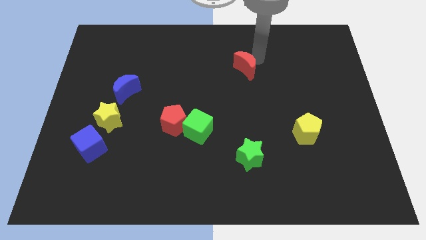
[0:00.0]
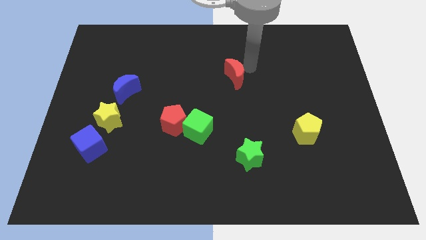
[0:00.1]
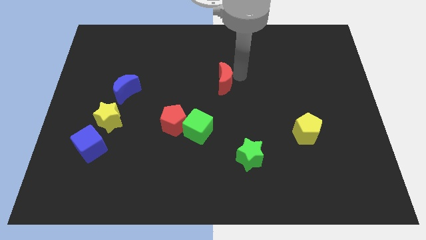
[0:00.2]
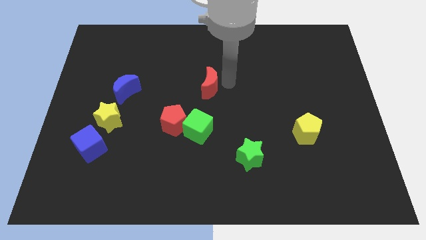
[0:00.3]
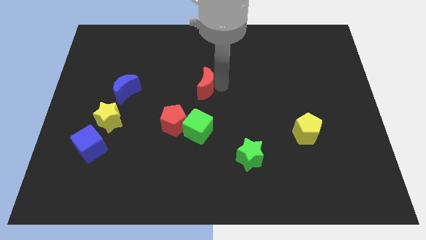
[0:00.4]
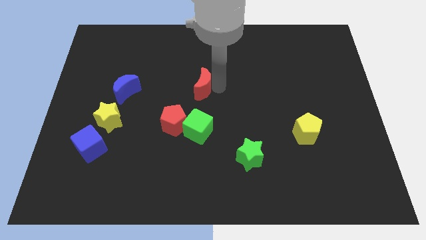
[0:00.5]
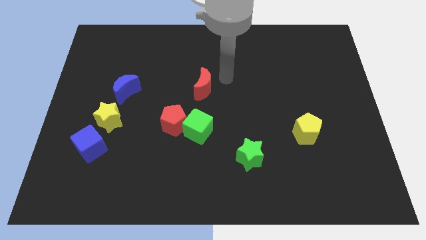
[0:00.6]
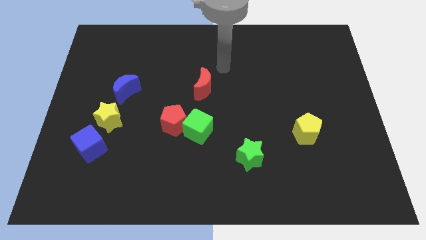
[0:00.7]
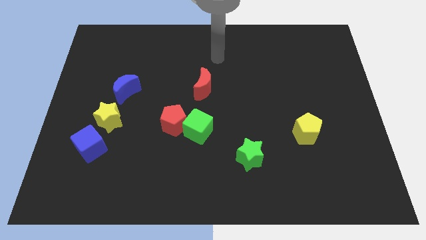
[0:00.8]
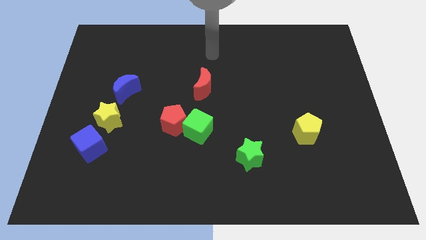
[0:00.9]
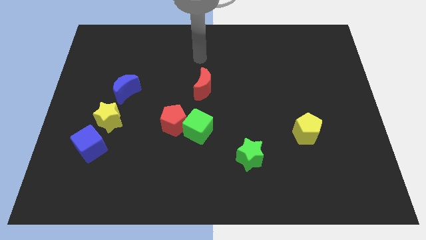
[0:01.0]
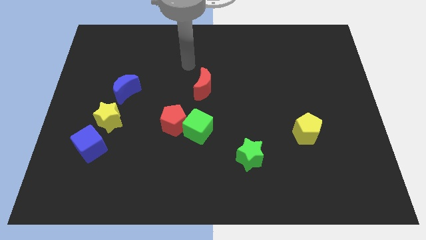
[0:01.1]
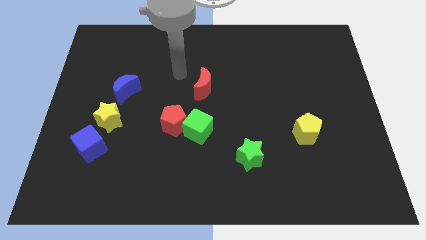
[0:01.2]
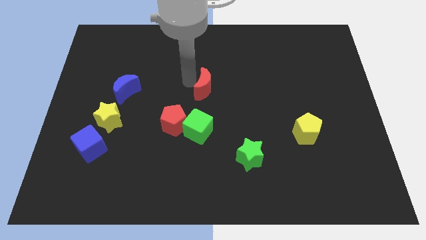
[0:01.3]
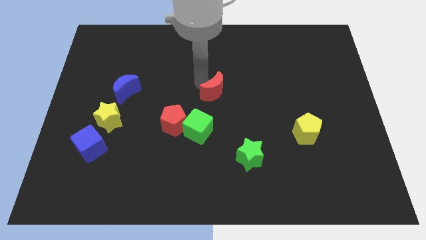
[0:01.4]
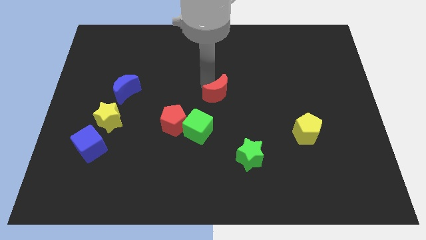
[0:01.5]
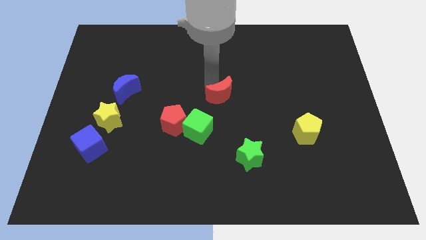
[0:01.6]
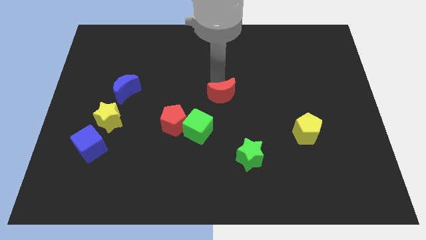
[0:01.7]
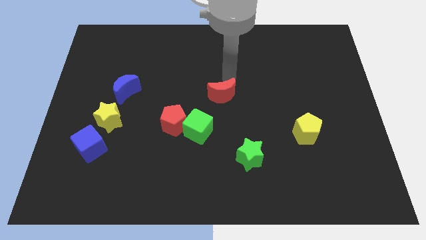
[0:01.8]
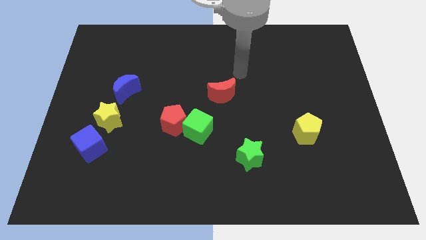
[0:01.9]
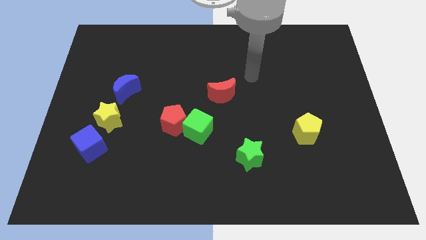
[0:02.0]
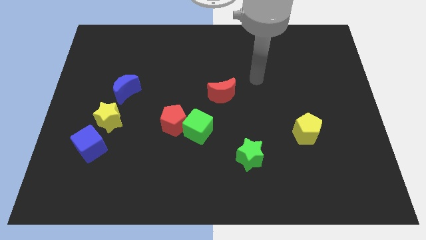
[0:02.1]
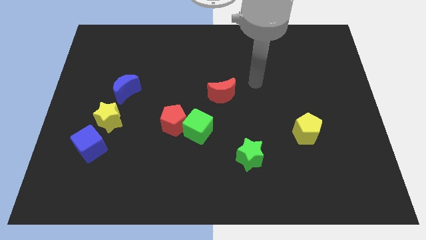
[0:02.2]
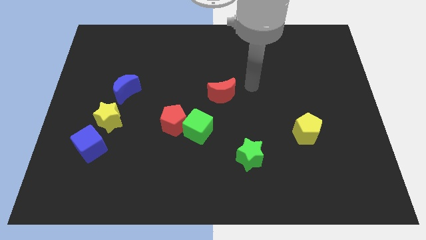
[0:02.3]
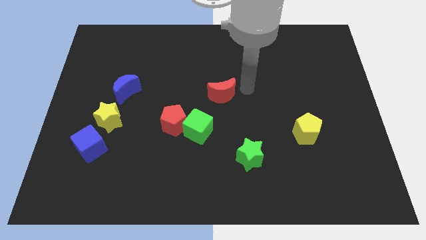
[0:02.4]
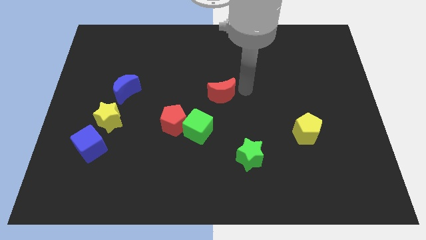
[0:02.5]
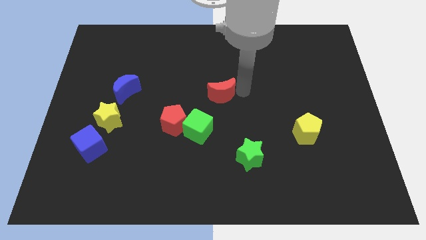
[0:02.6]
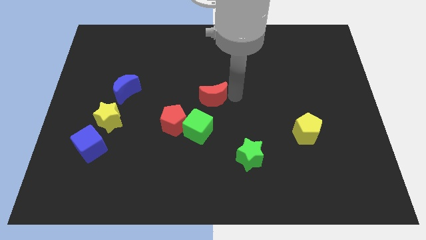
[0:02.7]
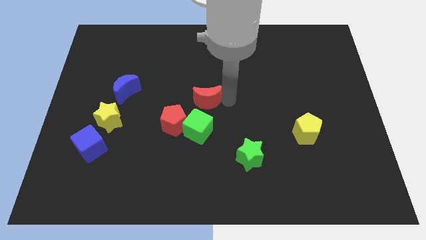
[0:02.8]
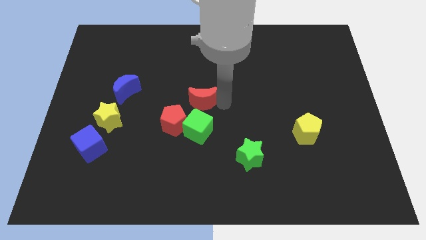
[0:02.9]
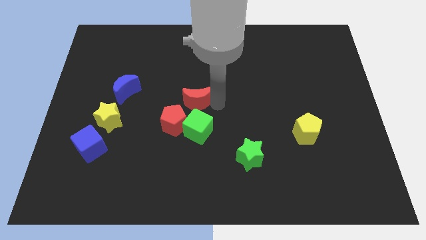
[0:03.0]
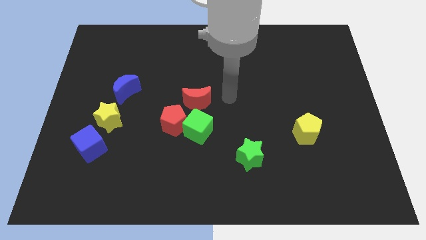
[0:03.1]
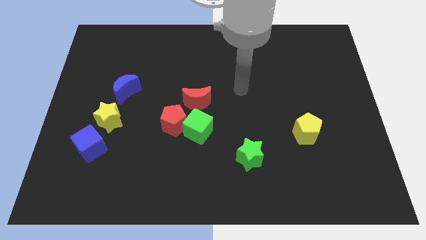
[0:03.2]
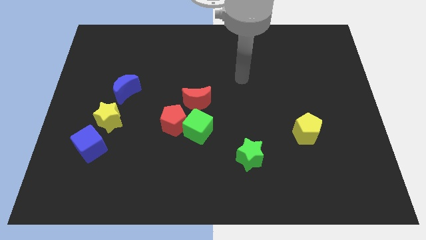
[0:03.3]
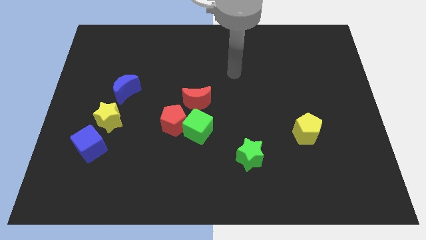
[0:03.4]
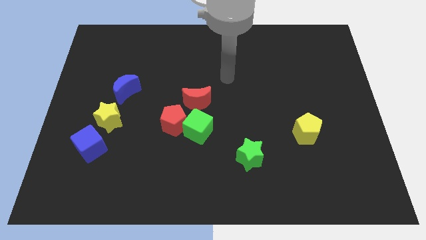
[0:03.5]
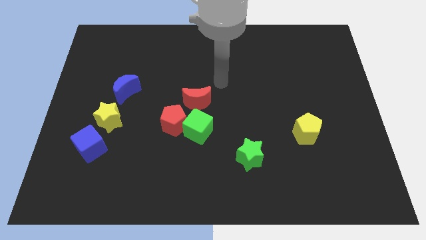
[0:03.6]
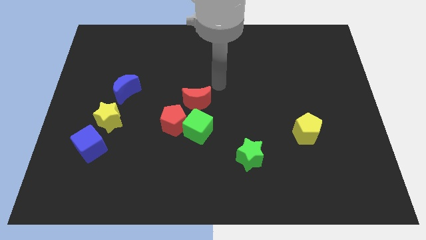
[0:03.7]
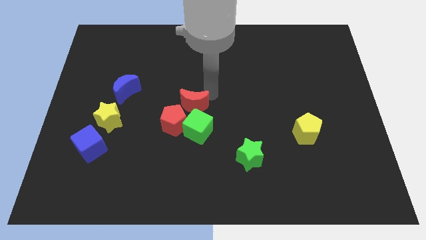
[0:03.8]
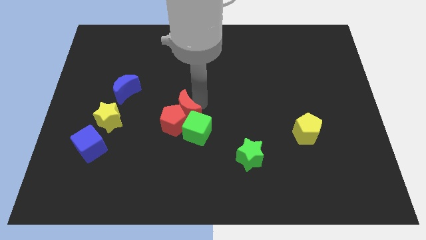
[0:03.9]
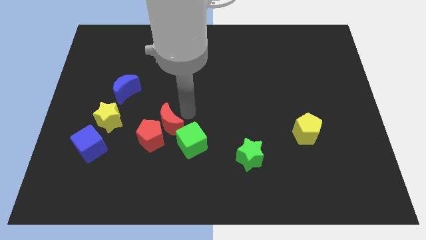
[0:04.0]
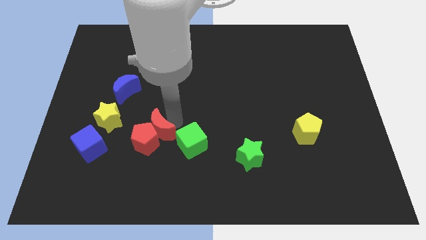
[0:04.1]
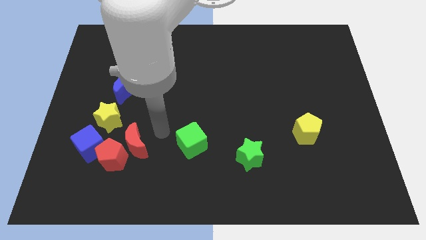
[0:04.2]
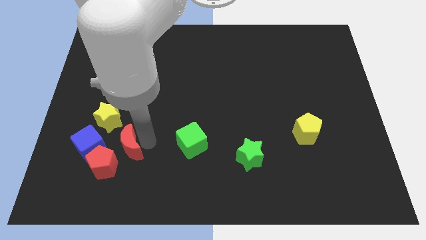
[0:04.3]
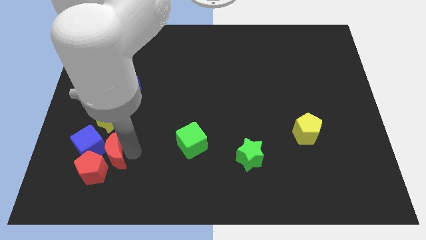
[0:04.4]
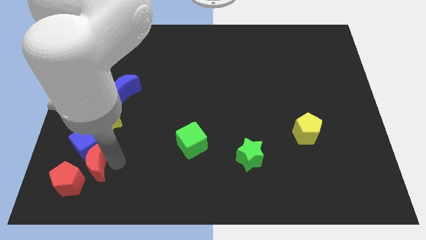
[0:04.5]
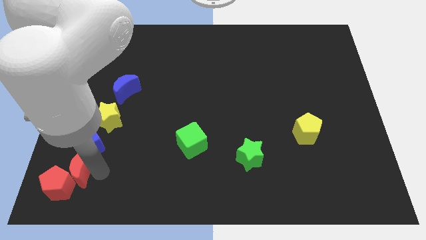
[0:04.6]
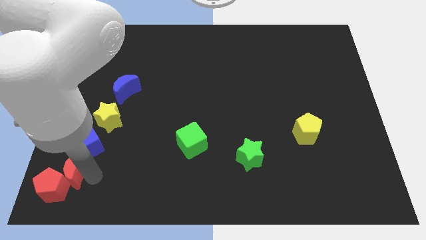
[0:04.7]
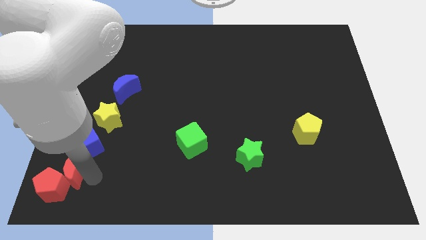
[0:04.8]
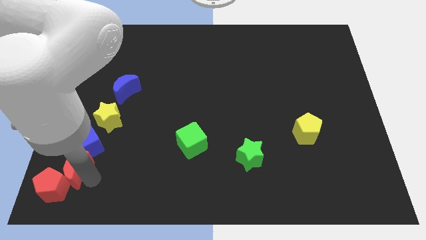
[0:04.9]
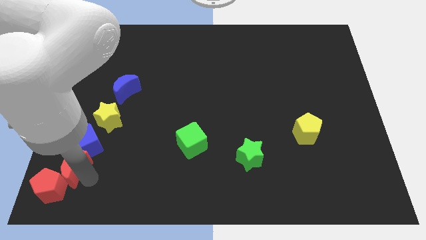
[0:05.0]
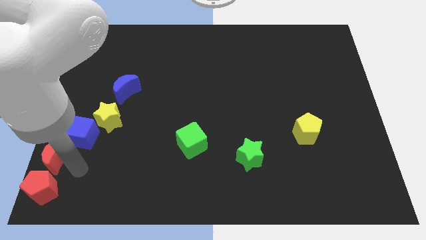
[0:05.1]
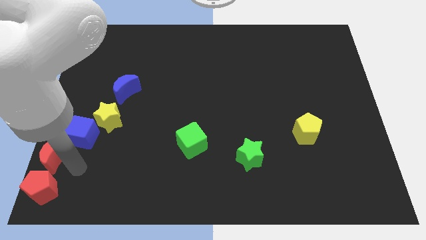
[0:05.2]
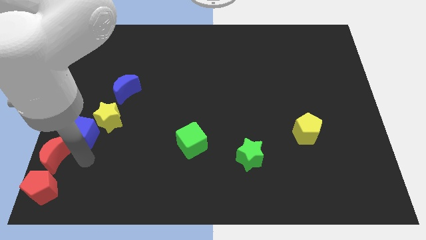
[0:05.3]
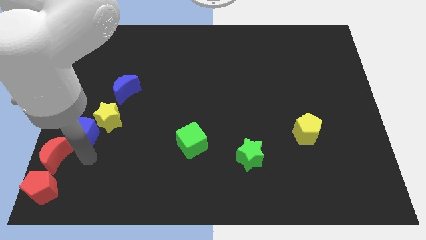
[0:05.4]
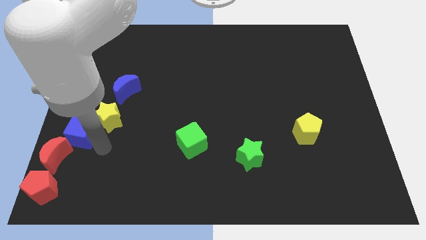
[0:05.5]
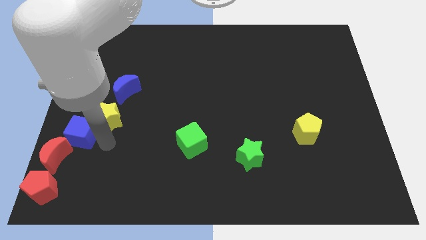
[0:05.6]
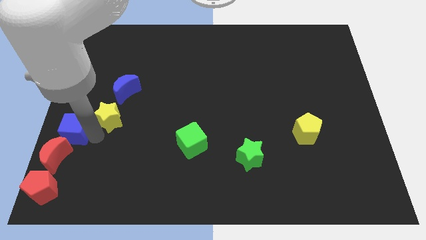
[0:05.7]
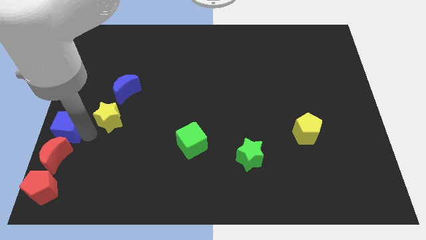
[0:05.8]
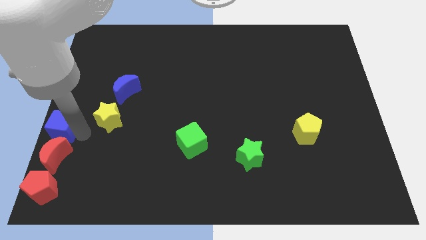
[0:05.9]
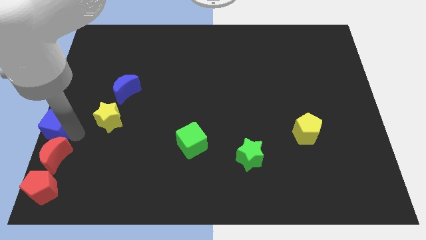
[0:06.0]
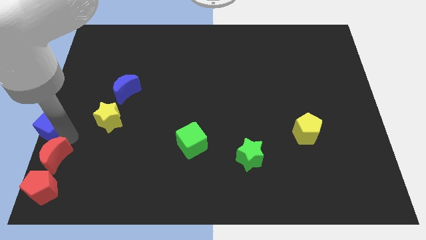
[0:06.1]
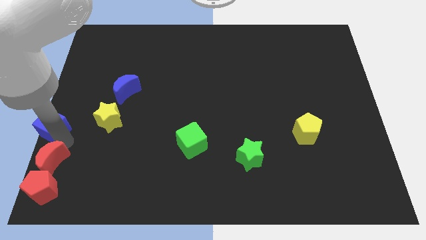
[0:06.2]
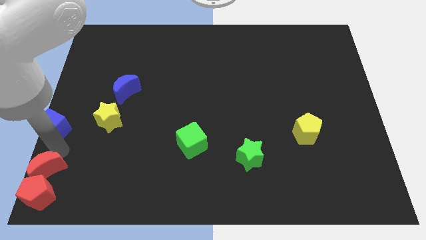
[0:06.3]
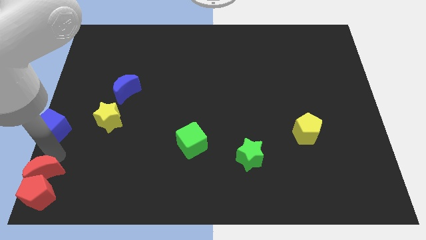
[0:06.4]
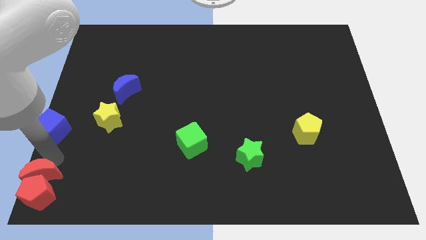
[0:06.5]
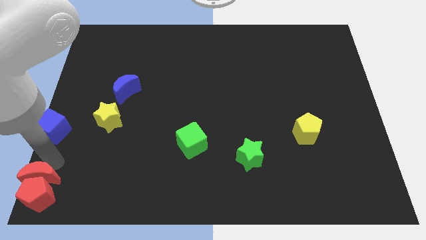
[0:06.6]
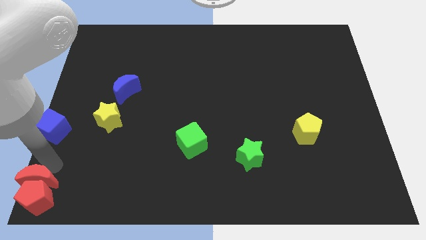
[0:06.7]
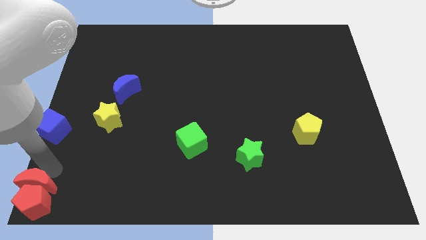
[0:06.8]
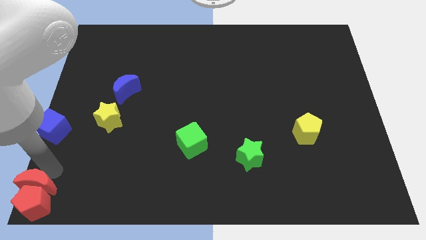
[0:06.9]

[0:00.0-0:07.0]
push the red pentagon along with the red crescent to the bottom left of the board

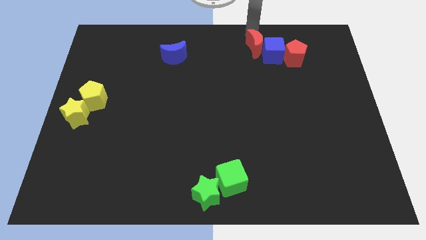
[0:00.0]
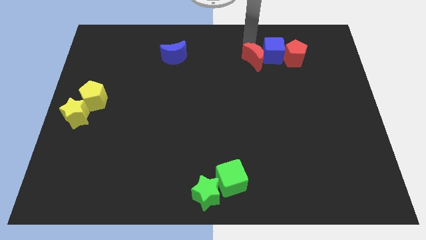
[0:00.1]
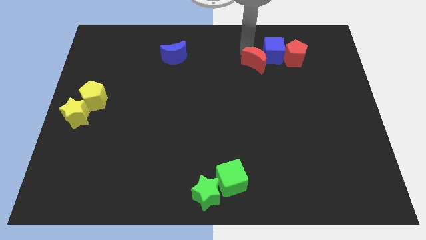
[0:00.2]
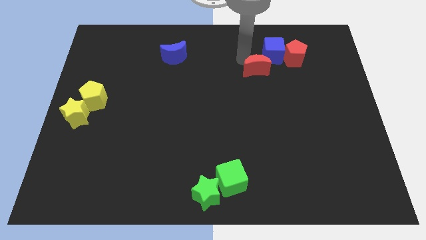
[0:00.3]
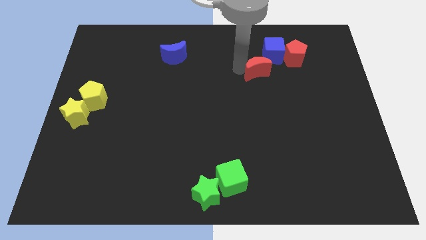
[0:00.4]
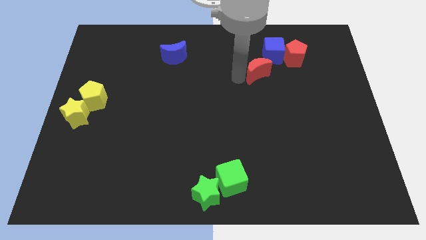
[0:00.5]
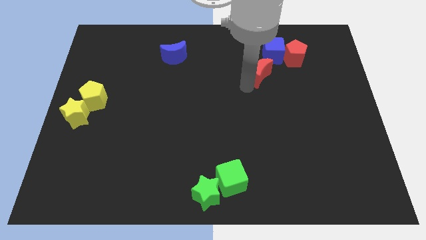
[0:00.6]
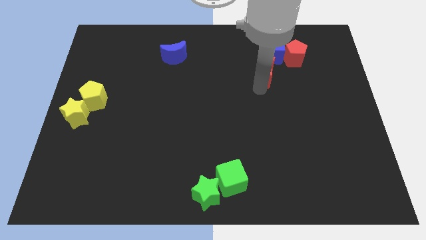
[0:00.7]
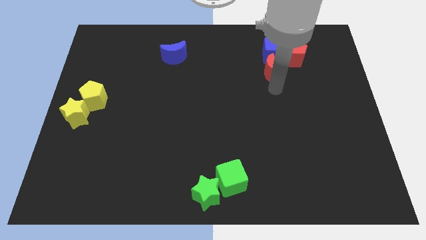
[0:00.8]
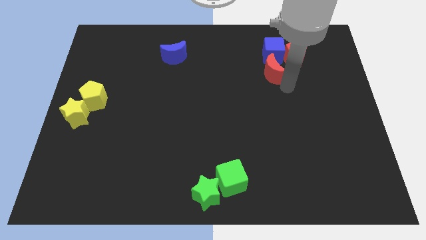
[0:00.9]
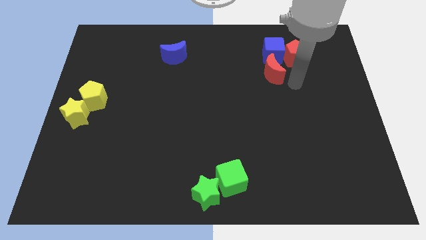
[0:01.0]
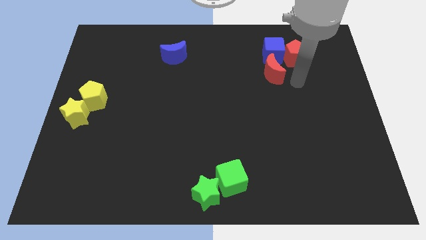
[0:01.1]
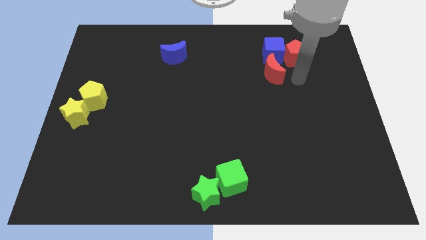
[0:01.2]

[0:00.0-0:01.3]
move the red moon to the bottom side of the blue cube

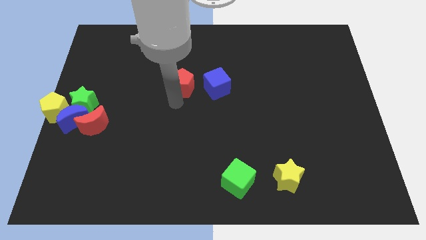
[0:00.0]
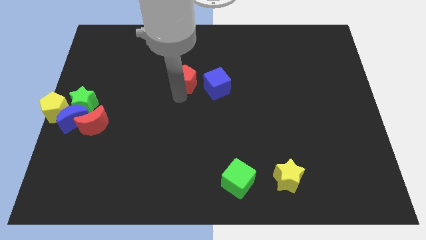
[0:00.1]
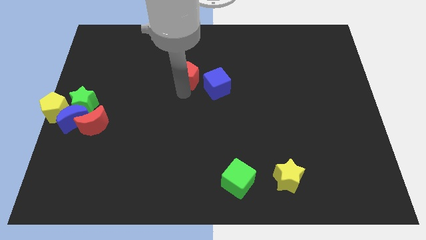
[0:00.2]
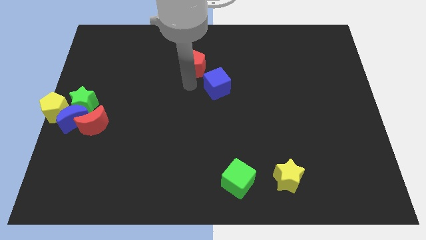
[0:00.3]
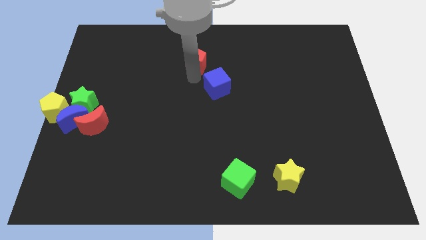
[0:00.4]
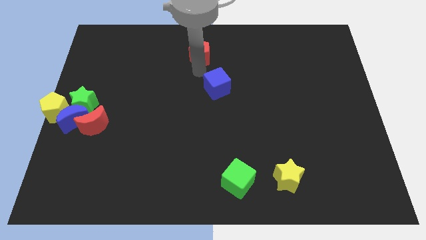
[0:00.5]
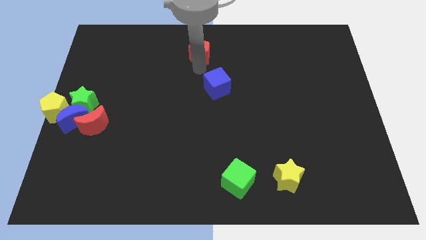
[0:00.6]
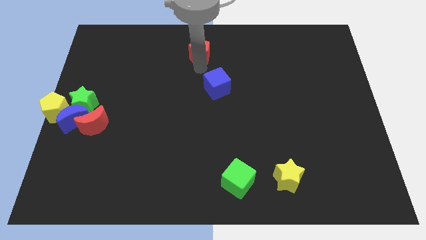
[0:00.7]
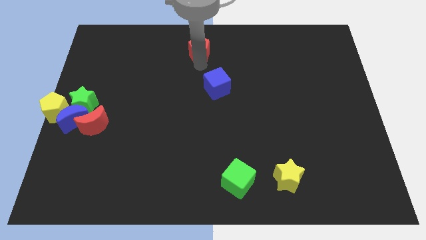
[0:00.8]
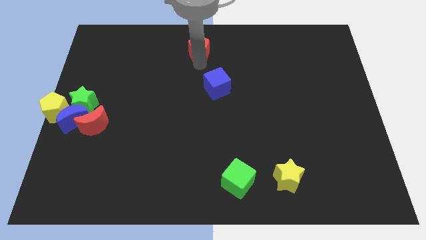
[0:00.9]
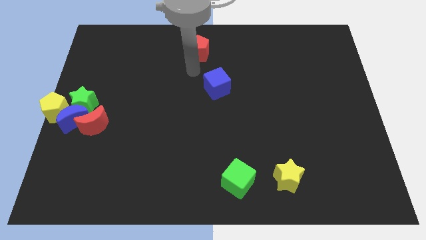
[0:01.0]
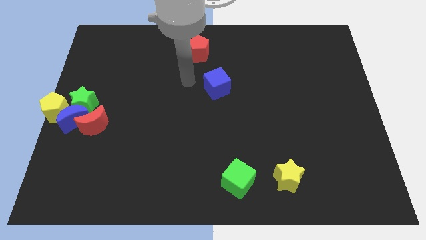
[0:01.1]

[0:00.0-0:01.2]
push the red pentagon towards the top center of the board
